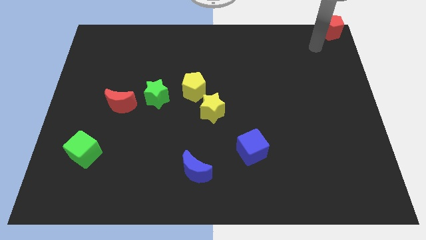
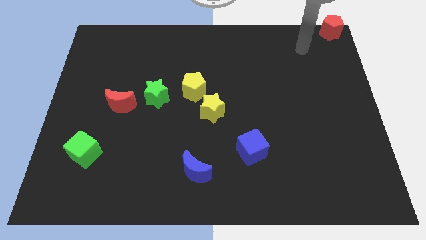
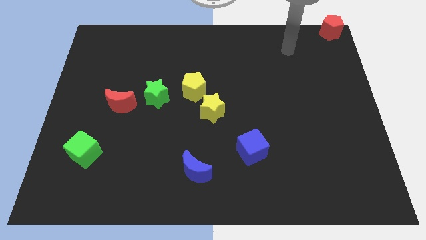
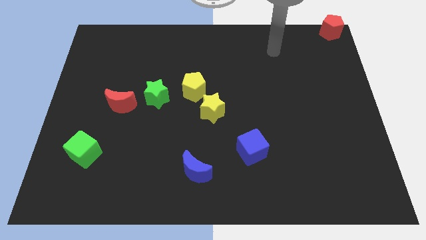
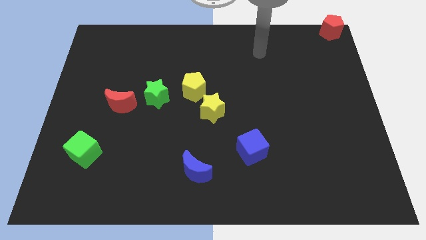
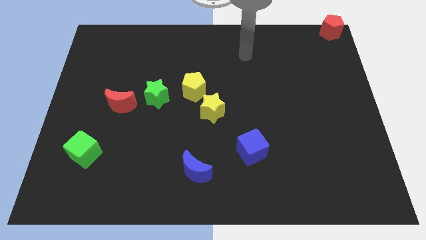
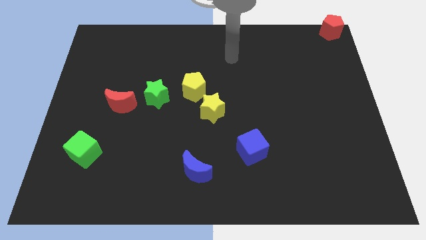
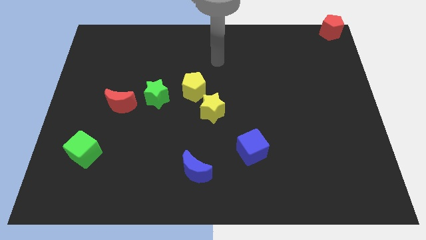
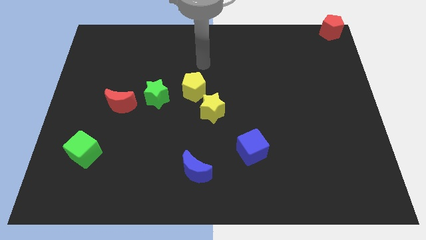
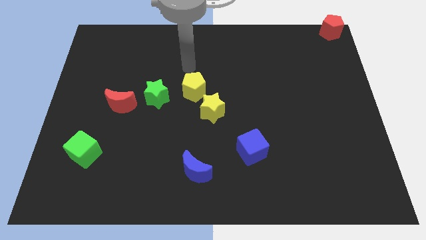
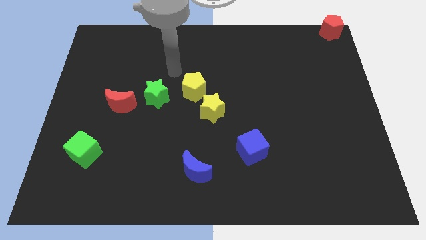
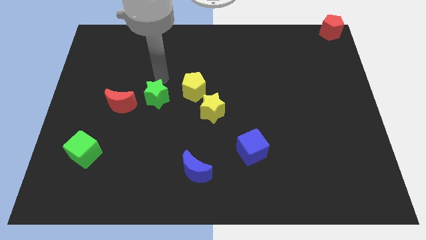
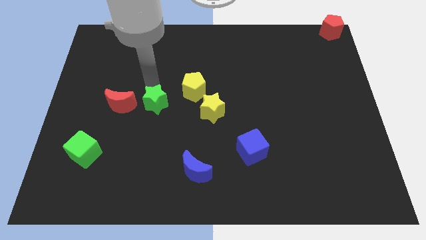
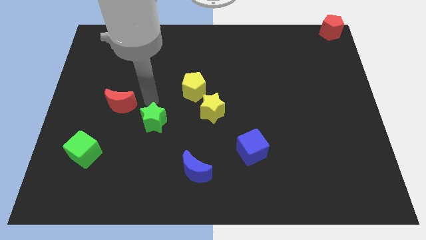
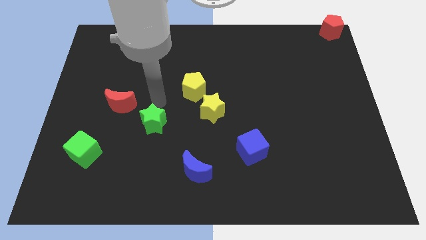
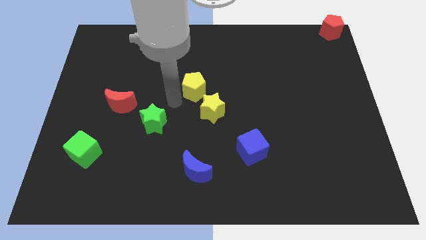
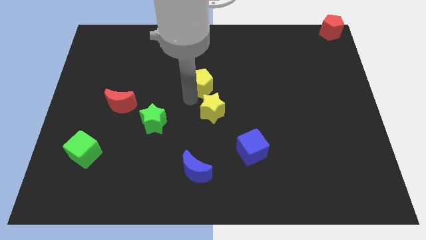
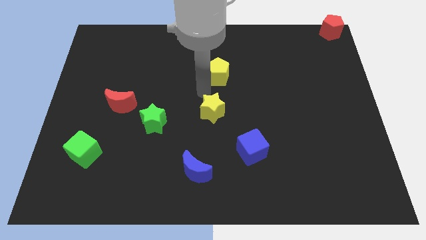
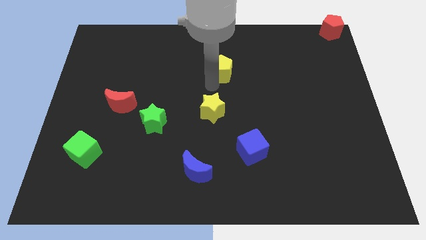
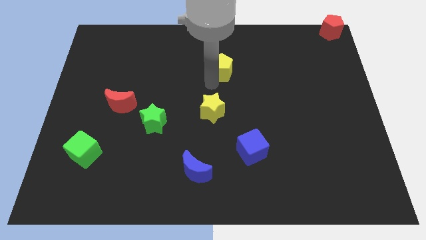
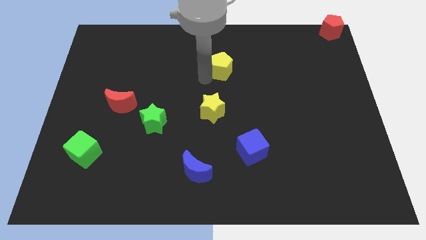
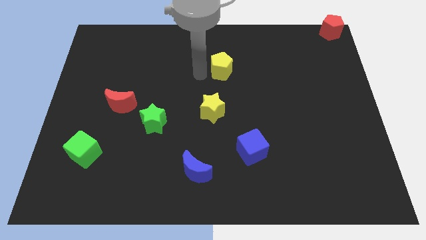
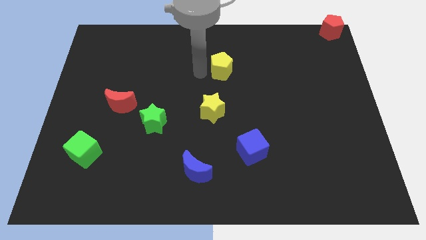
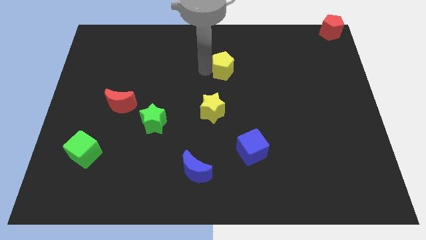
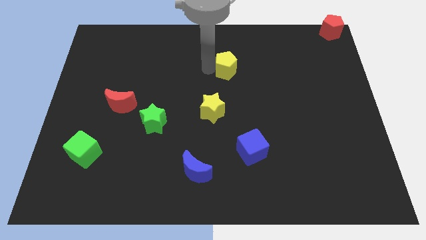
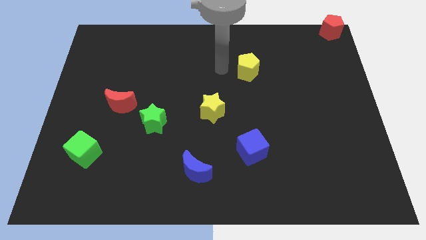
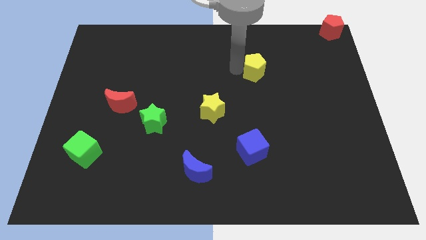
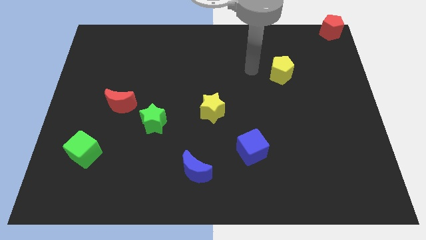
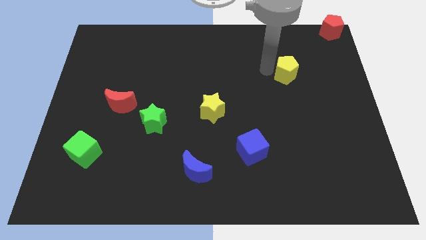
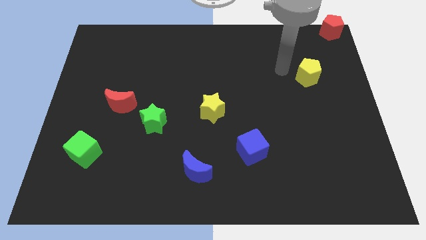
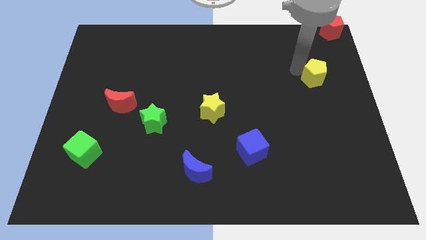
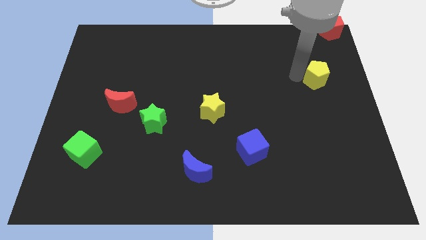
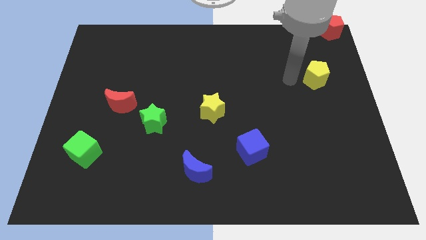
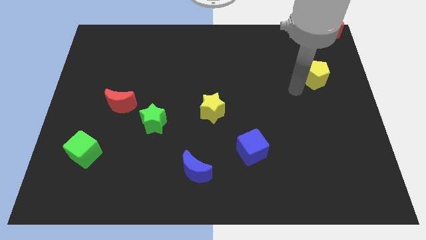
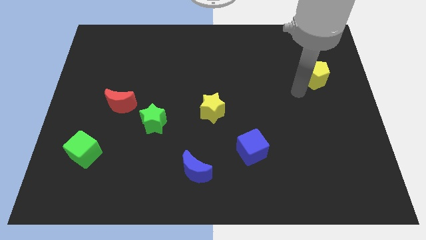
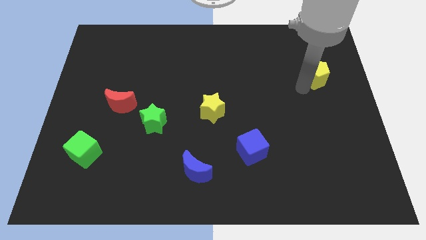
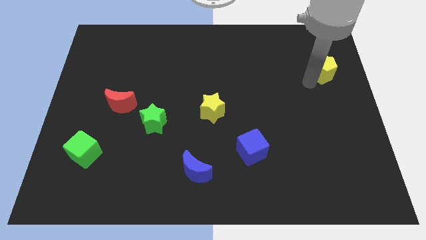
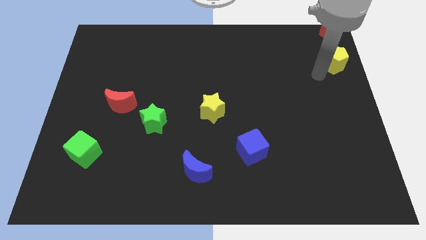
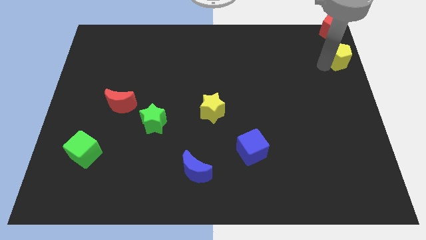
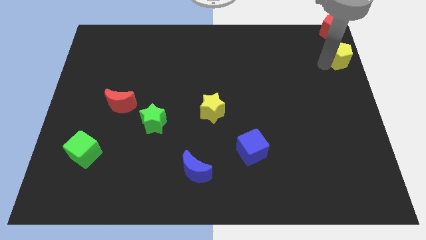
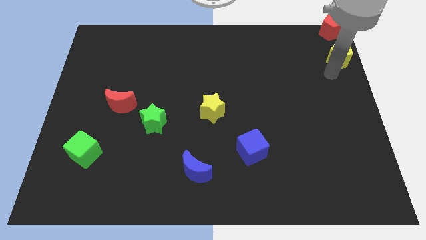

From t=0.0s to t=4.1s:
place the yellow pentagon under the red pentagon

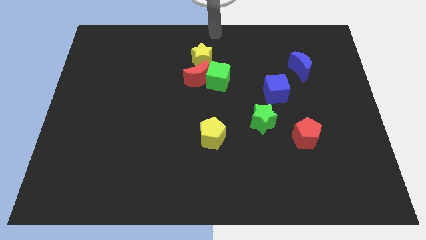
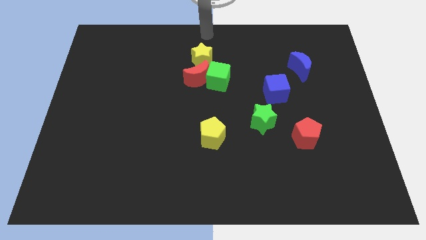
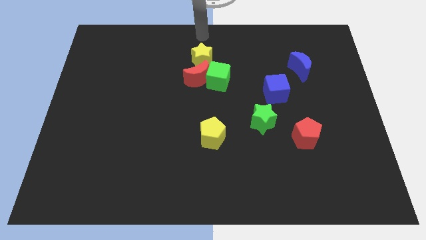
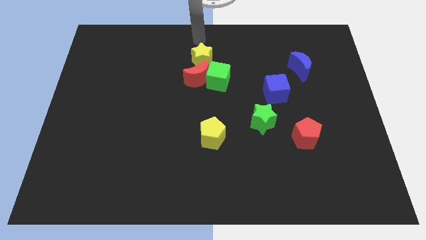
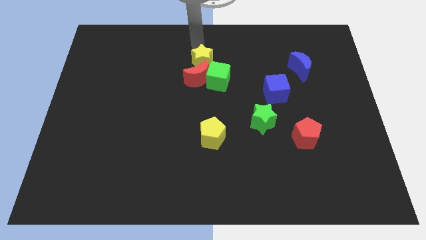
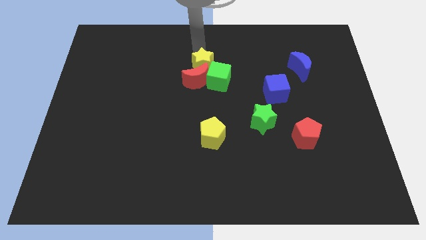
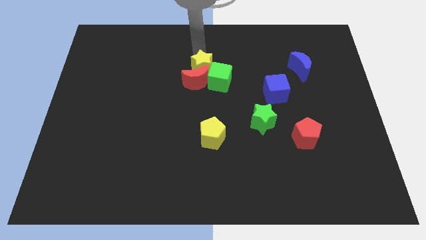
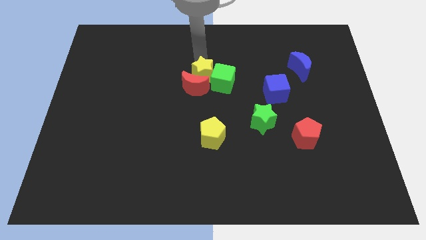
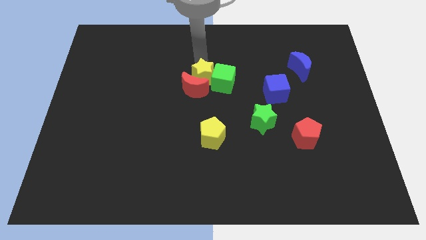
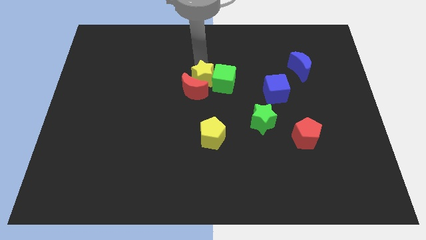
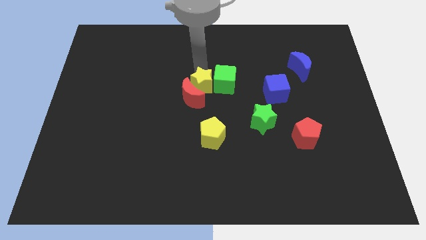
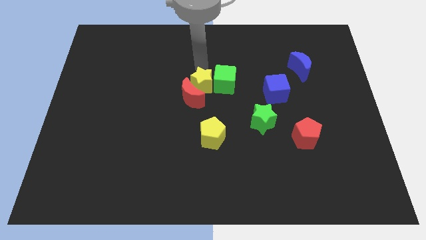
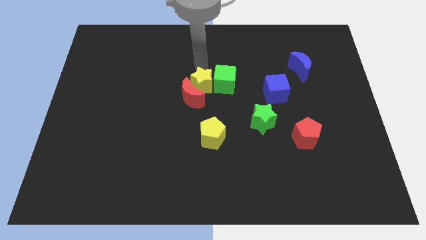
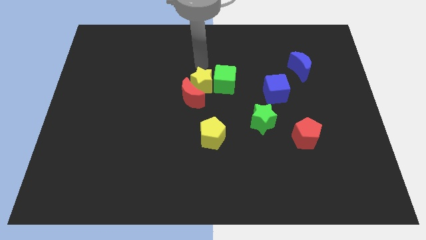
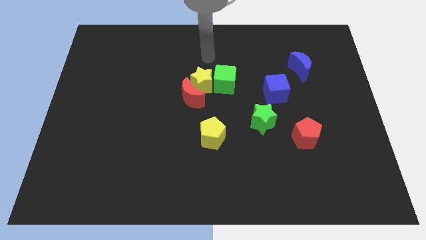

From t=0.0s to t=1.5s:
push the yellow star to the left side of the green cube

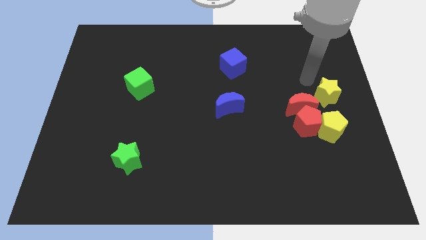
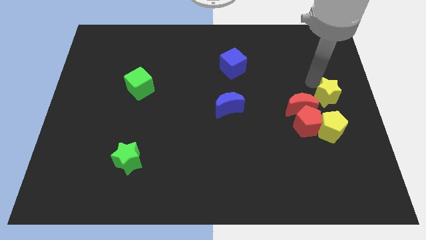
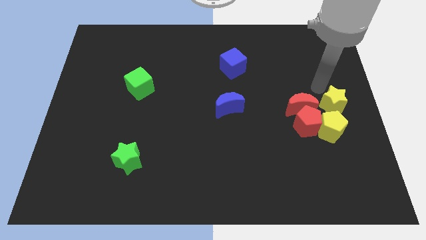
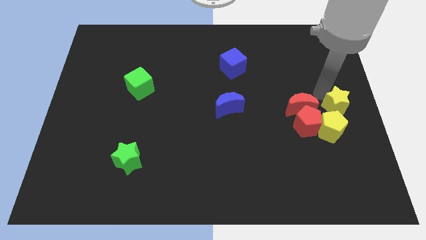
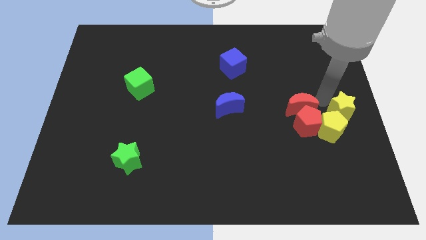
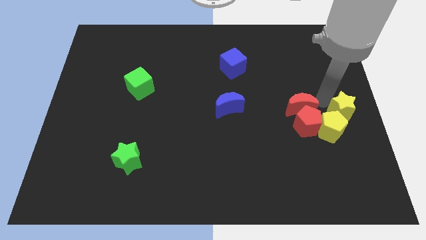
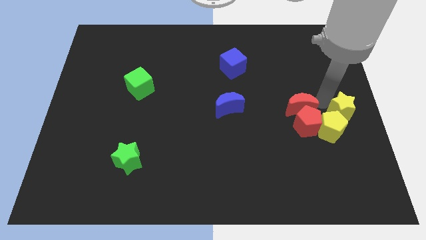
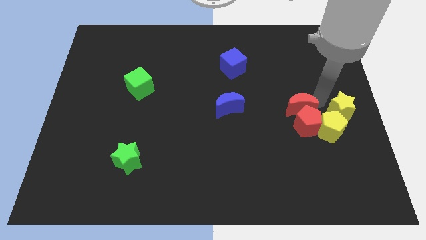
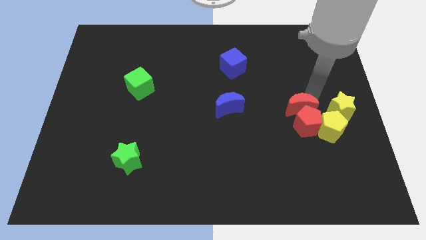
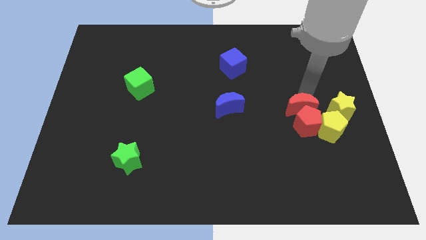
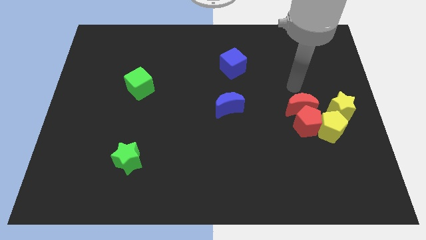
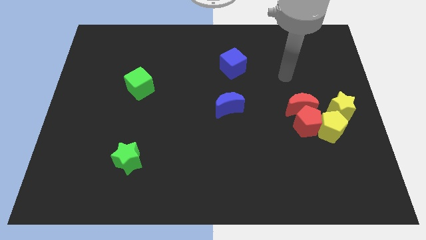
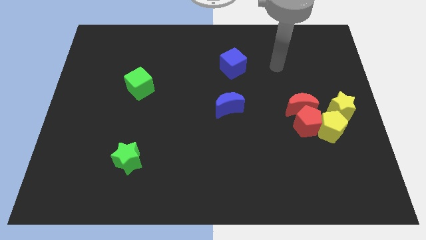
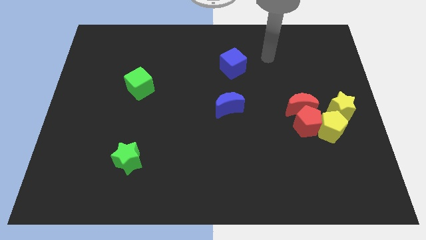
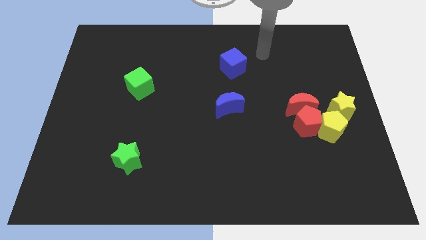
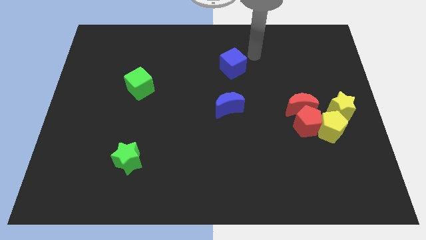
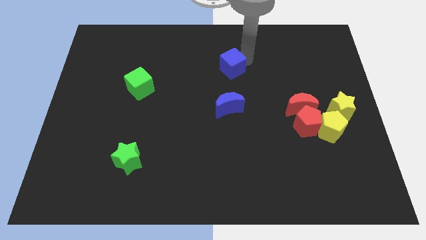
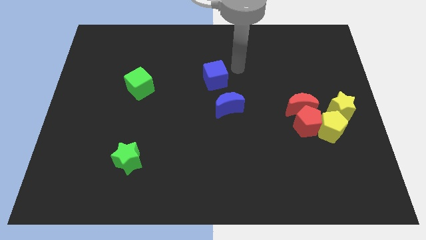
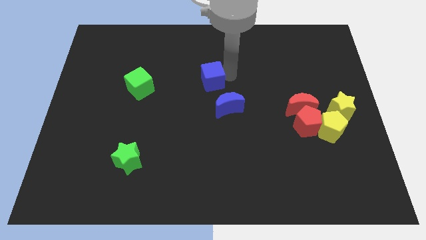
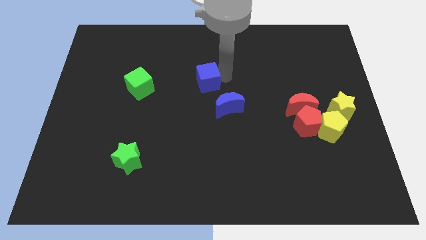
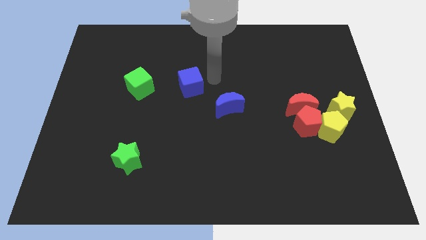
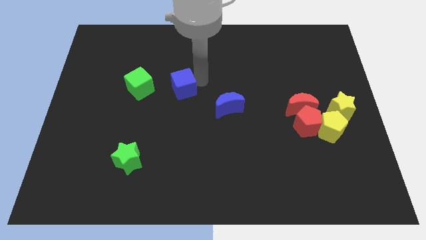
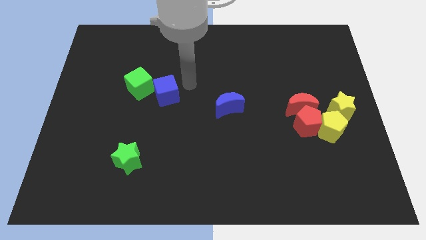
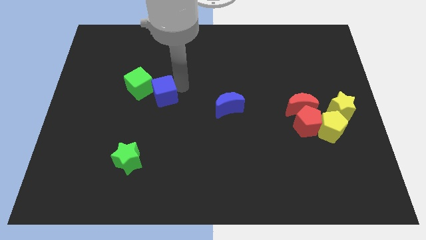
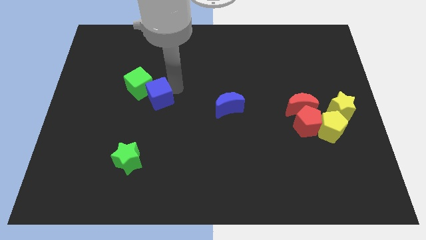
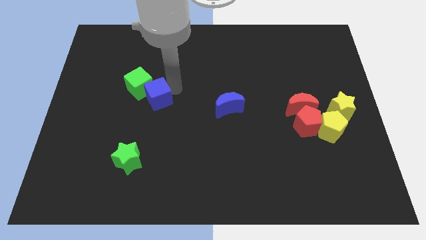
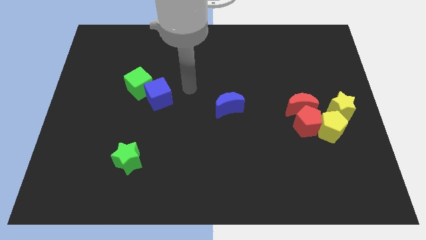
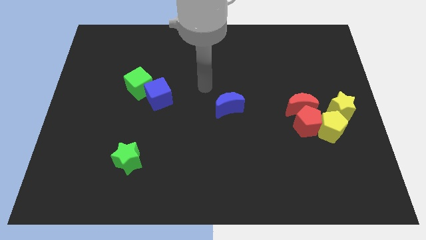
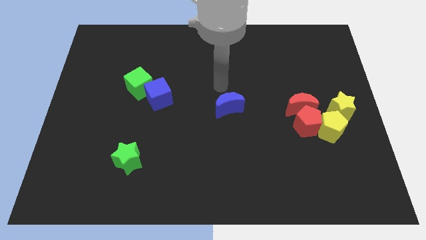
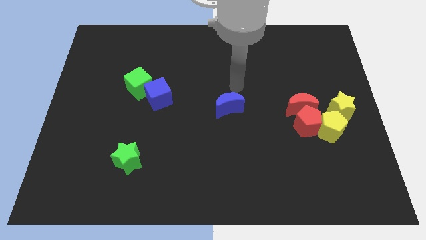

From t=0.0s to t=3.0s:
place the blue cube diagonal to the green cube

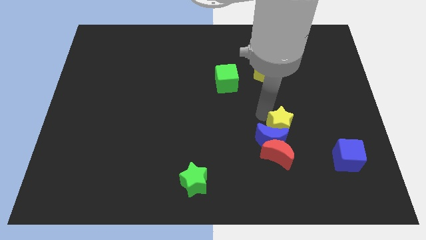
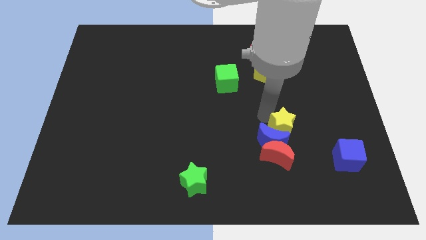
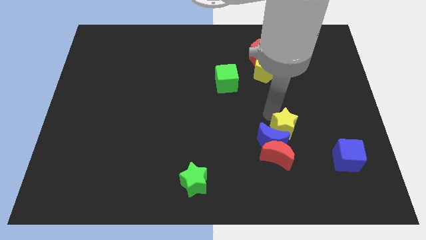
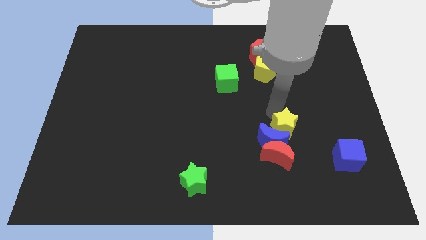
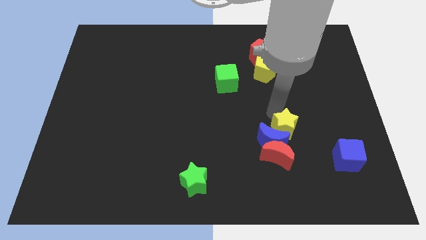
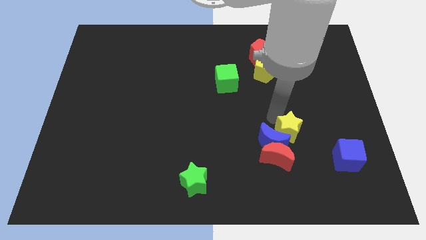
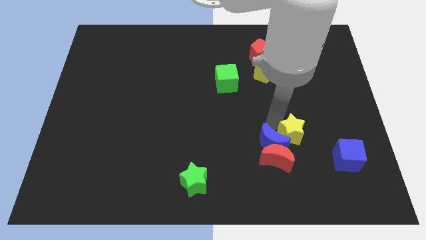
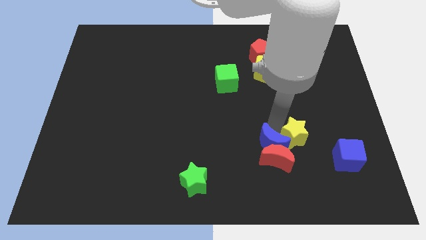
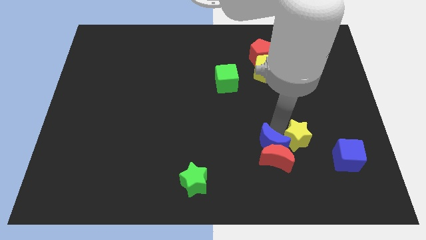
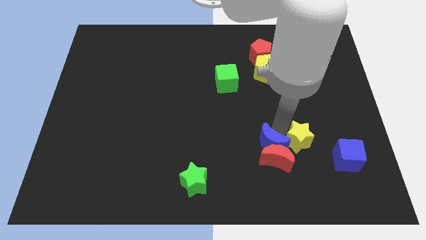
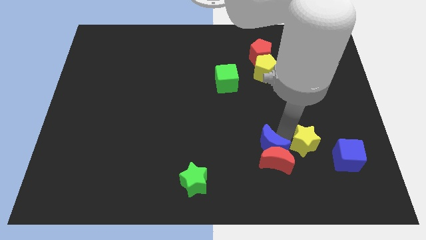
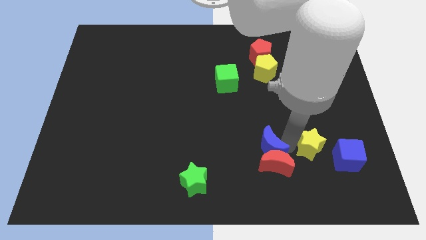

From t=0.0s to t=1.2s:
push the yellow star to the right side of the blue crescent
